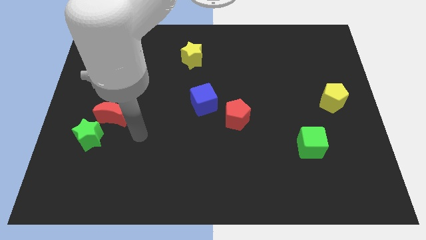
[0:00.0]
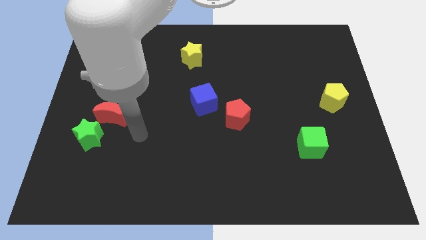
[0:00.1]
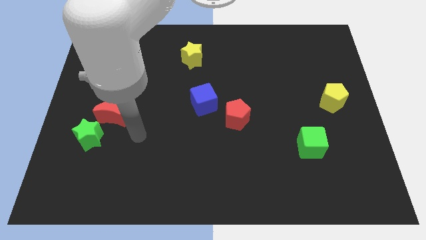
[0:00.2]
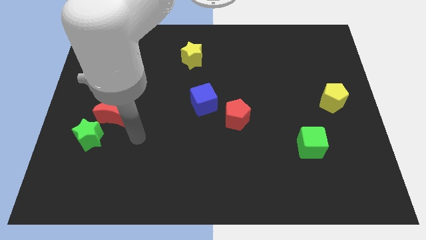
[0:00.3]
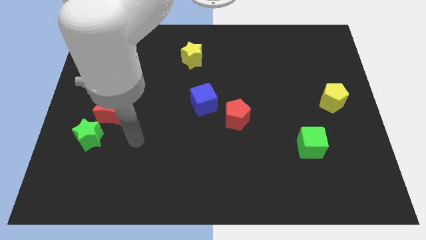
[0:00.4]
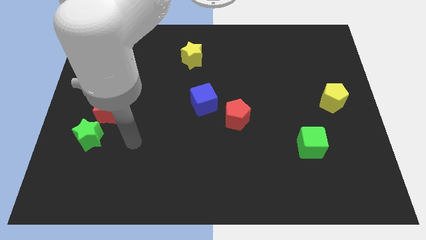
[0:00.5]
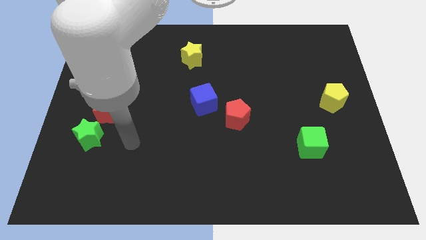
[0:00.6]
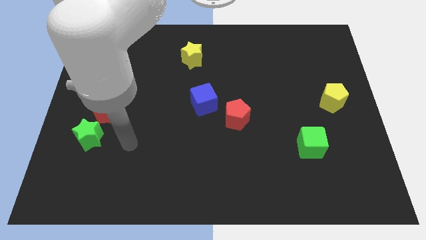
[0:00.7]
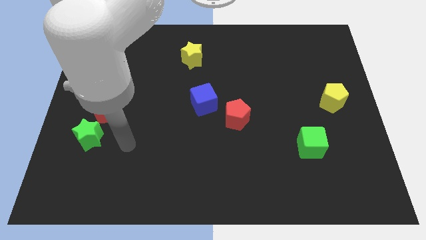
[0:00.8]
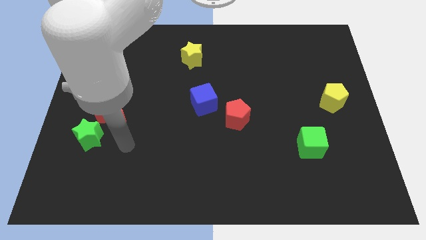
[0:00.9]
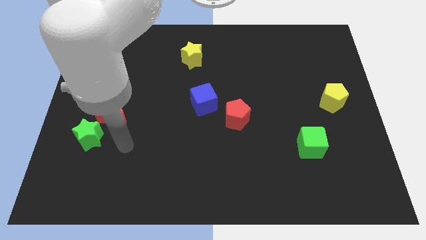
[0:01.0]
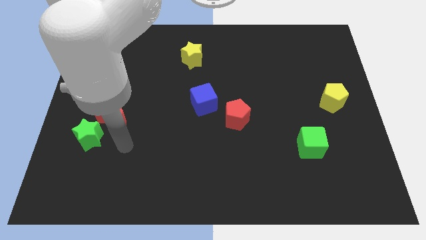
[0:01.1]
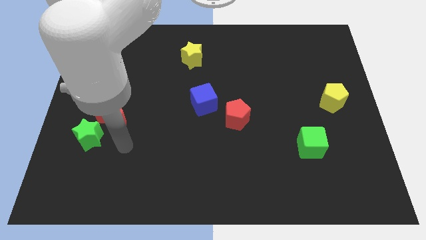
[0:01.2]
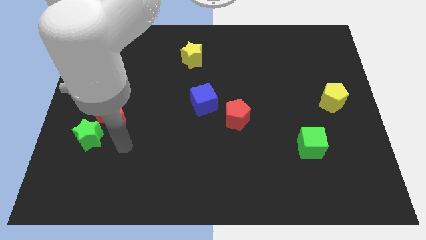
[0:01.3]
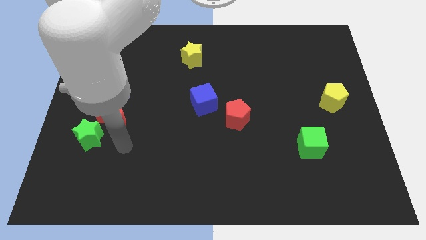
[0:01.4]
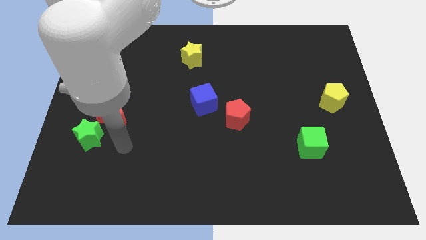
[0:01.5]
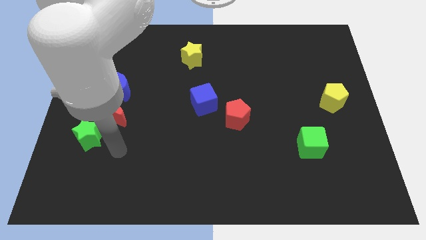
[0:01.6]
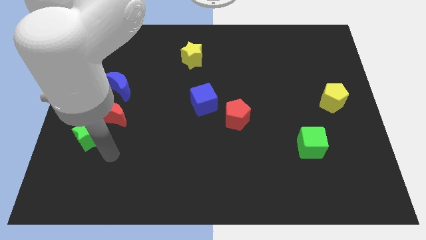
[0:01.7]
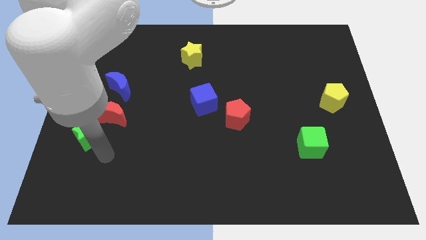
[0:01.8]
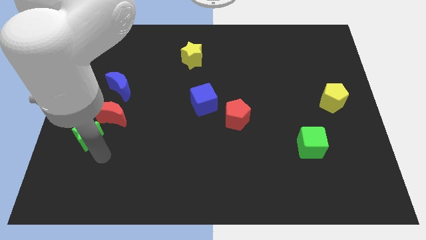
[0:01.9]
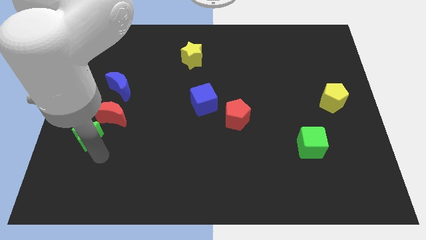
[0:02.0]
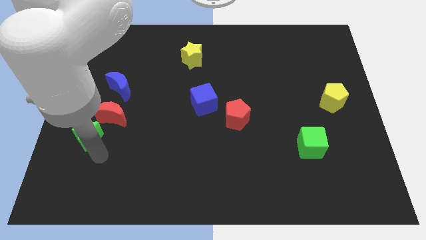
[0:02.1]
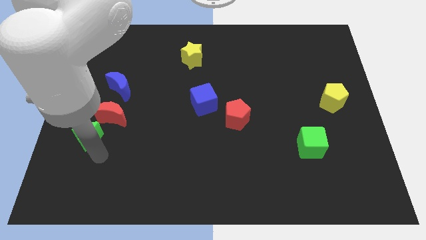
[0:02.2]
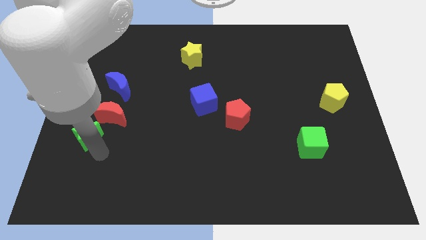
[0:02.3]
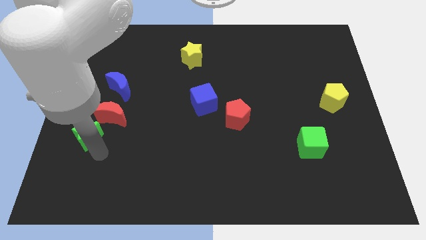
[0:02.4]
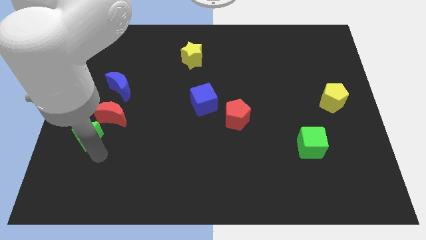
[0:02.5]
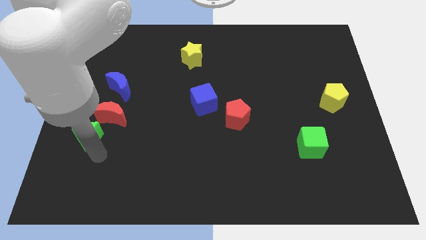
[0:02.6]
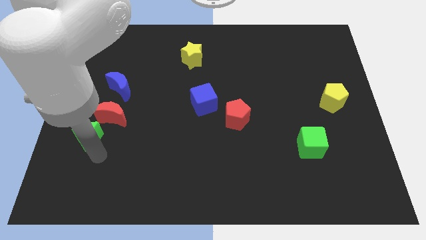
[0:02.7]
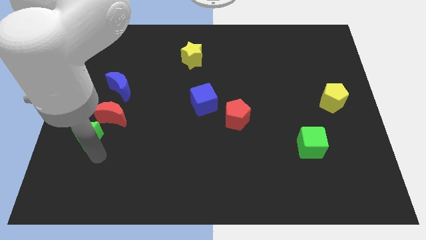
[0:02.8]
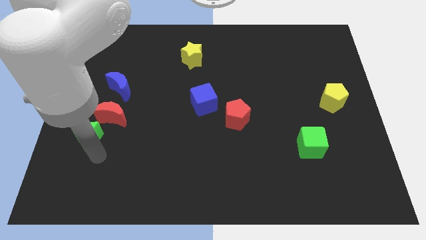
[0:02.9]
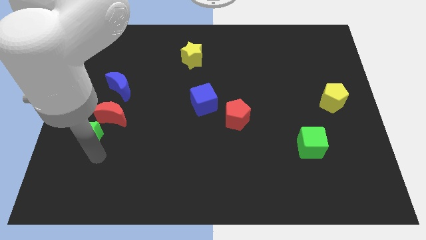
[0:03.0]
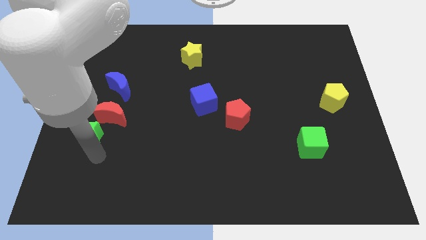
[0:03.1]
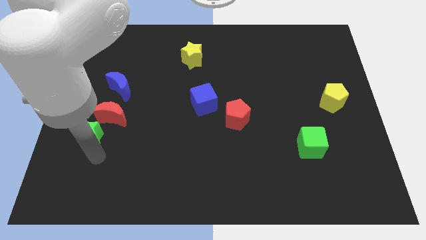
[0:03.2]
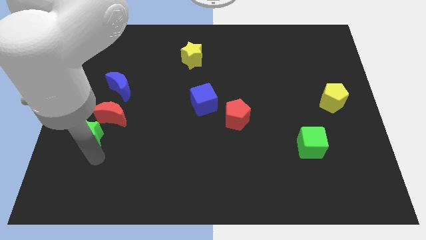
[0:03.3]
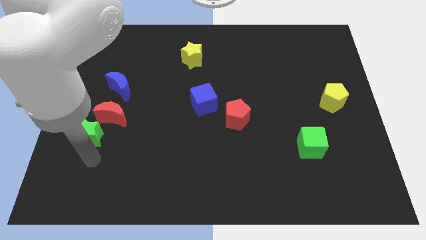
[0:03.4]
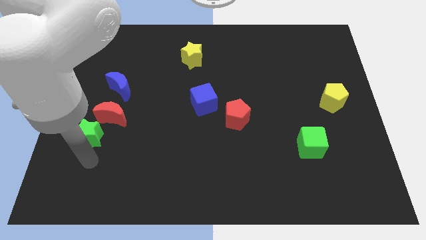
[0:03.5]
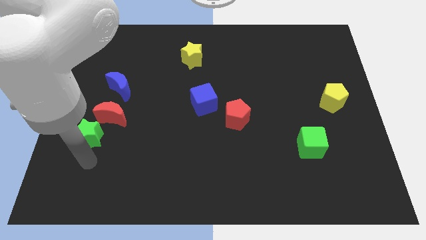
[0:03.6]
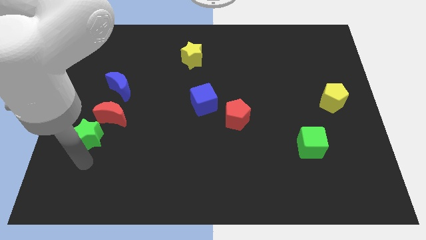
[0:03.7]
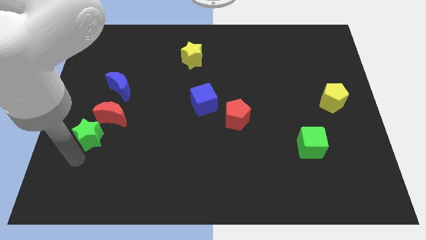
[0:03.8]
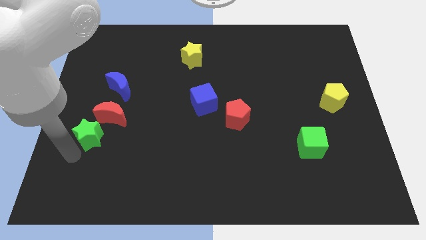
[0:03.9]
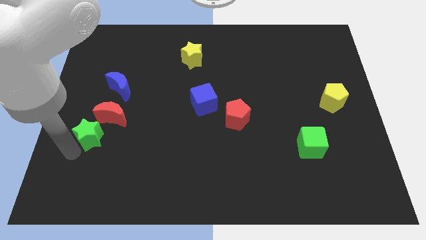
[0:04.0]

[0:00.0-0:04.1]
move your arm towards the green star

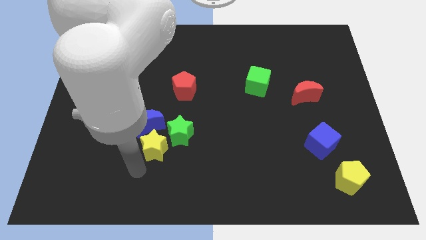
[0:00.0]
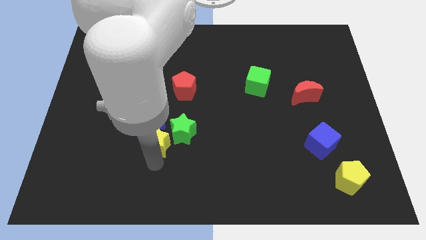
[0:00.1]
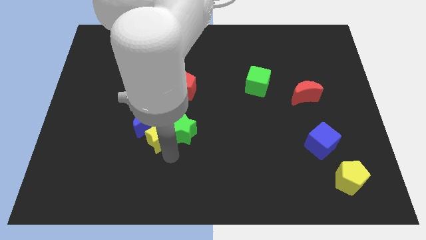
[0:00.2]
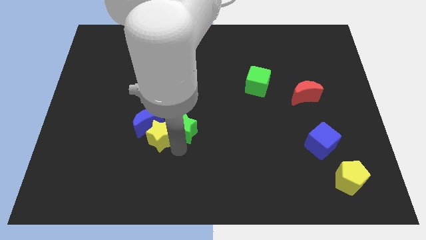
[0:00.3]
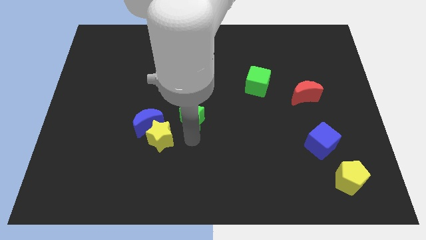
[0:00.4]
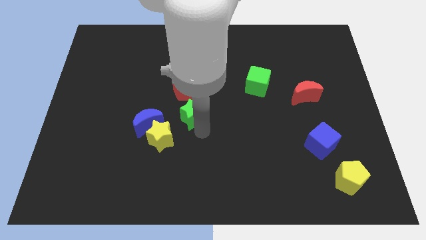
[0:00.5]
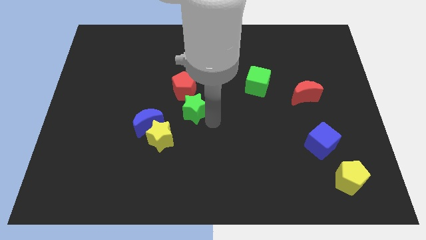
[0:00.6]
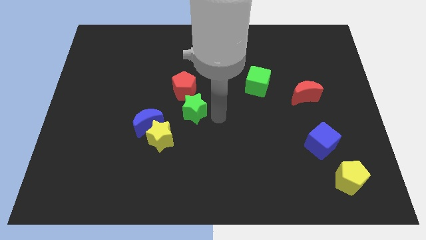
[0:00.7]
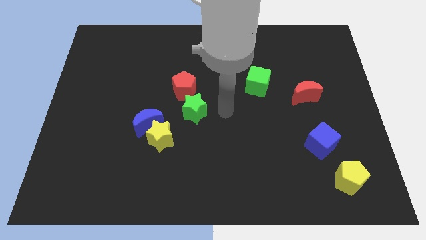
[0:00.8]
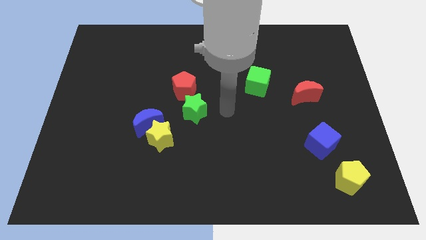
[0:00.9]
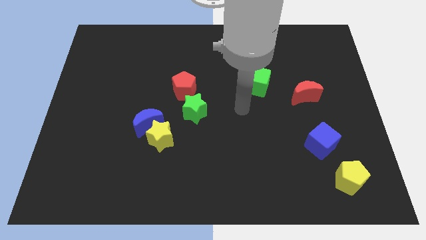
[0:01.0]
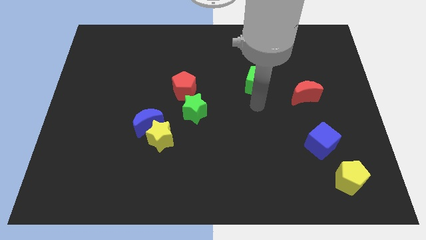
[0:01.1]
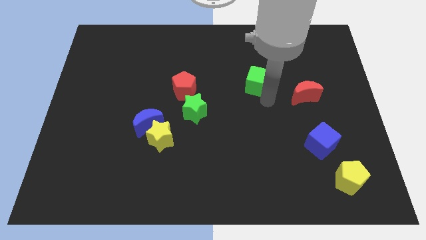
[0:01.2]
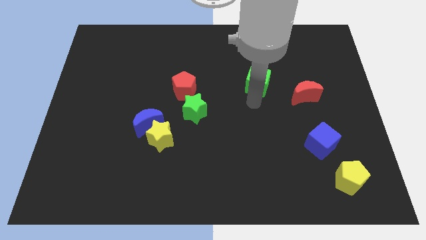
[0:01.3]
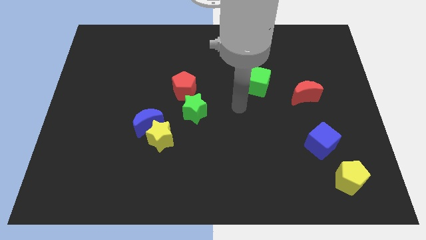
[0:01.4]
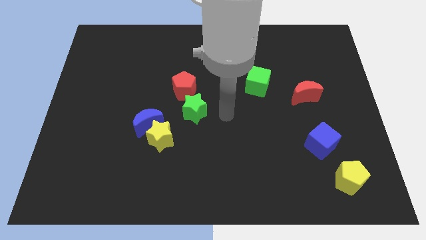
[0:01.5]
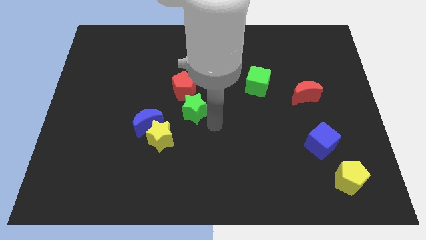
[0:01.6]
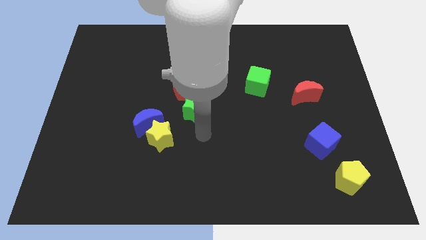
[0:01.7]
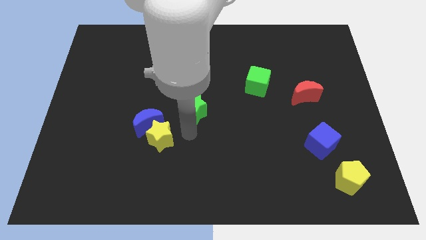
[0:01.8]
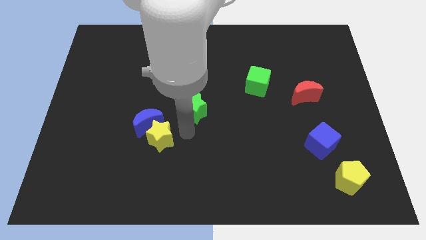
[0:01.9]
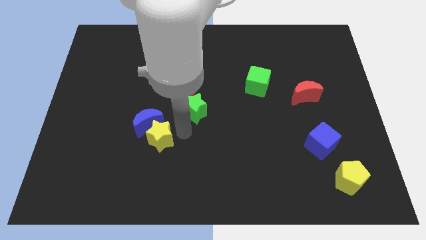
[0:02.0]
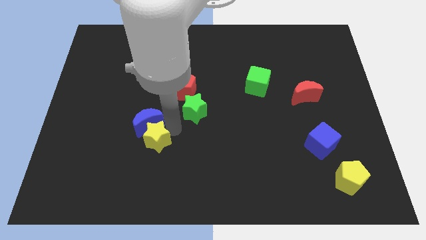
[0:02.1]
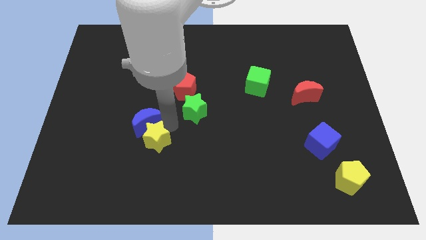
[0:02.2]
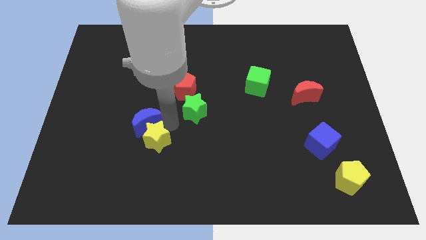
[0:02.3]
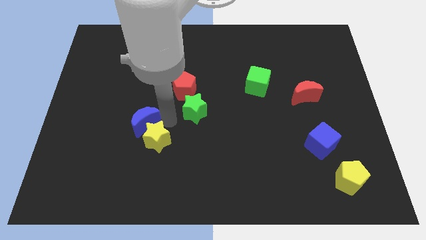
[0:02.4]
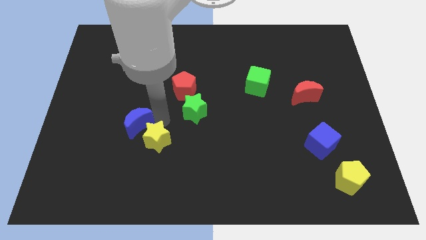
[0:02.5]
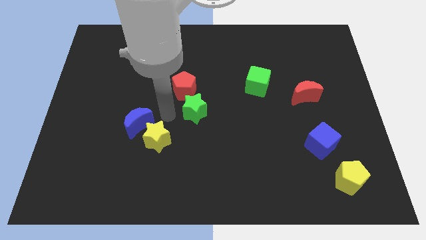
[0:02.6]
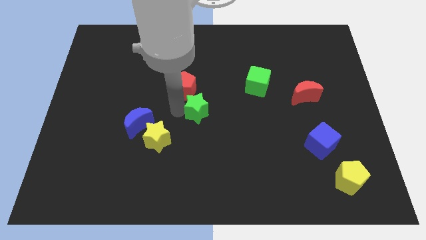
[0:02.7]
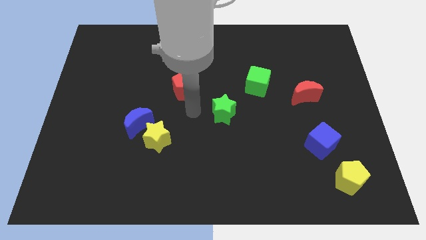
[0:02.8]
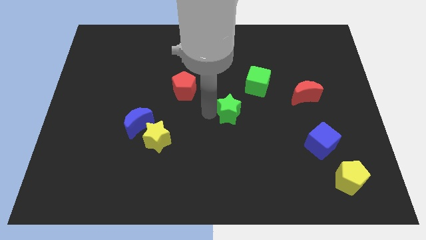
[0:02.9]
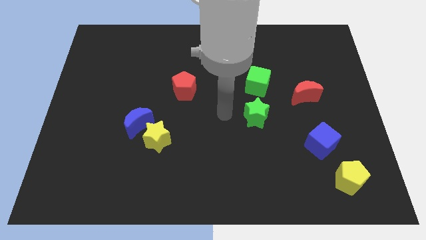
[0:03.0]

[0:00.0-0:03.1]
move the green star underneath the green cube

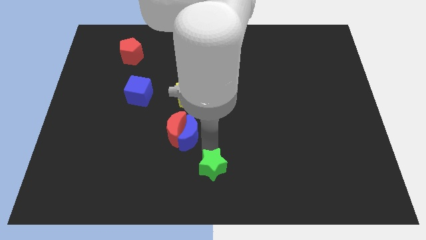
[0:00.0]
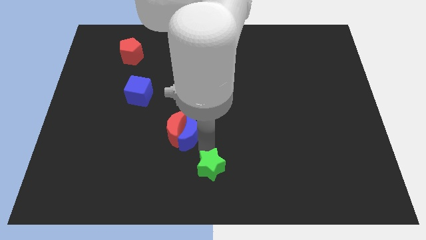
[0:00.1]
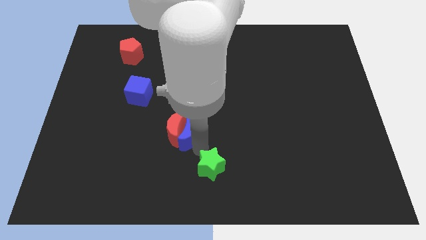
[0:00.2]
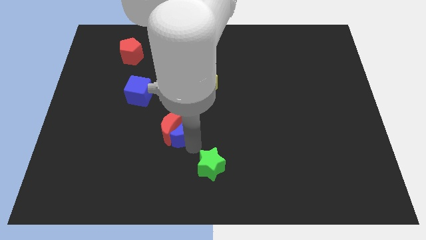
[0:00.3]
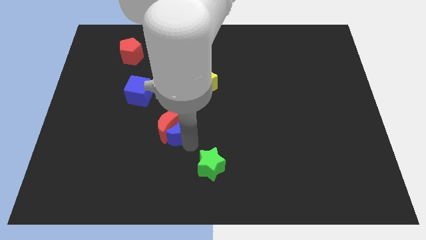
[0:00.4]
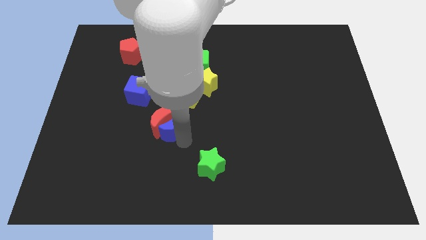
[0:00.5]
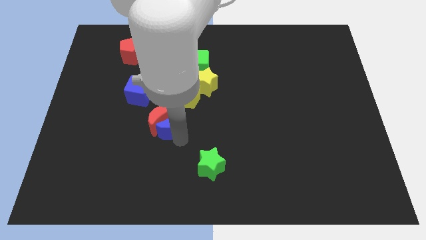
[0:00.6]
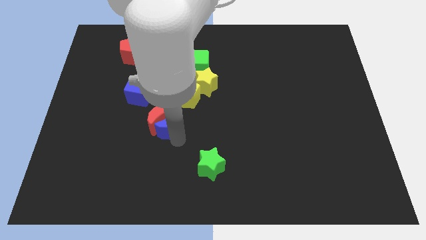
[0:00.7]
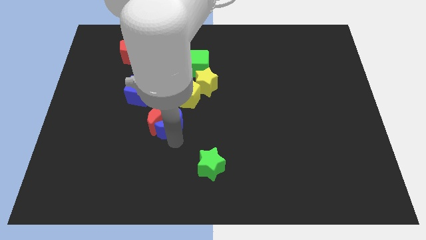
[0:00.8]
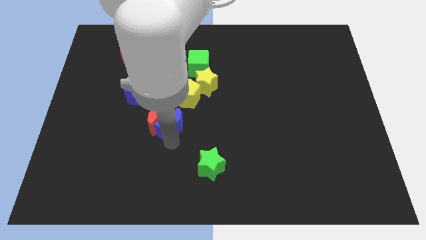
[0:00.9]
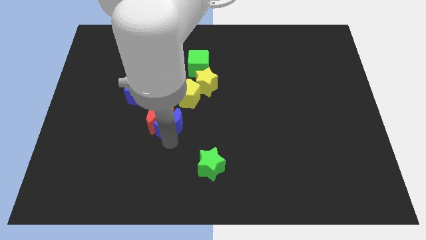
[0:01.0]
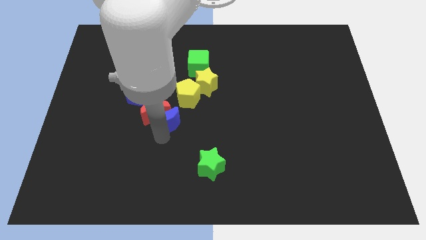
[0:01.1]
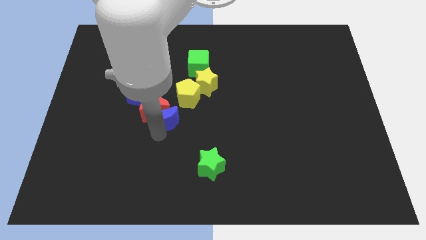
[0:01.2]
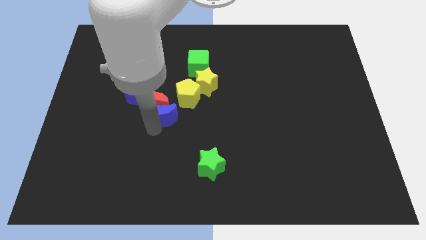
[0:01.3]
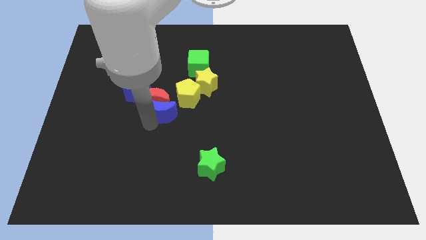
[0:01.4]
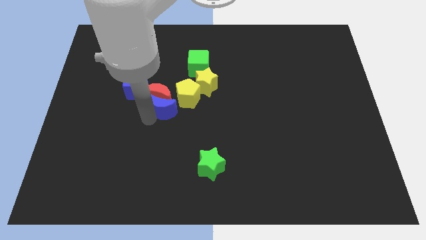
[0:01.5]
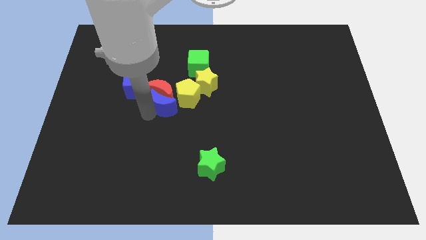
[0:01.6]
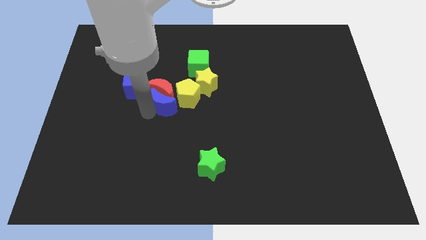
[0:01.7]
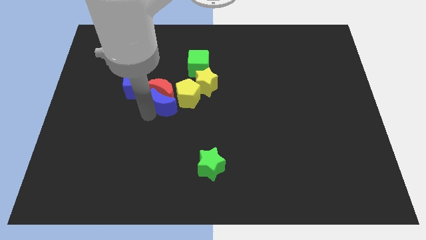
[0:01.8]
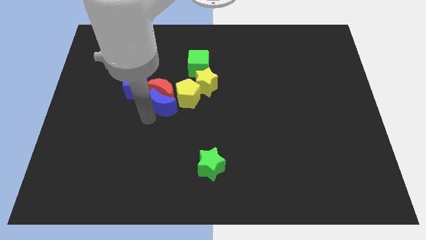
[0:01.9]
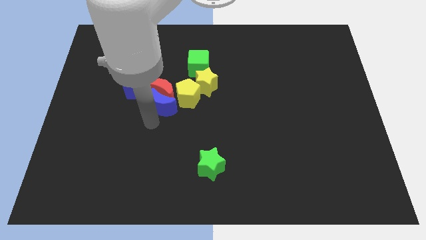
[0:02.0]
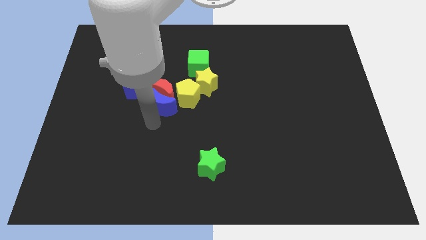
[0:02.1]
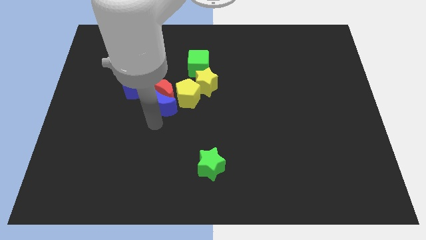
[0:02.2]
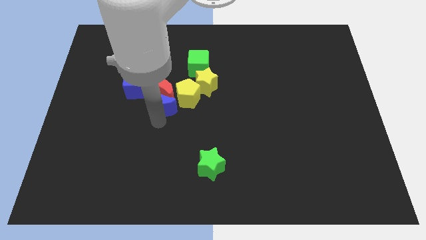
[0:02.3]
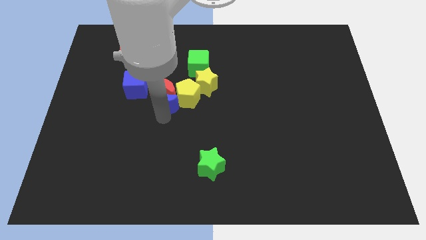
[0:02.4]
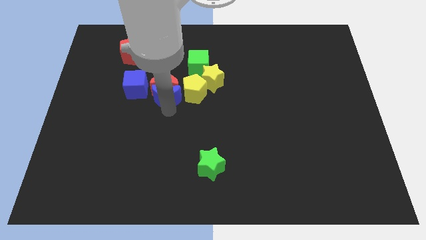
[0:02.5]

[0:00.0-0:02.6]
place blue moon and red moon between blue cube and yellow pentagon
